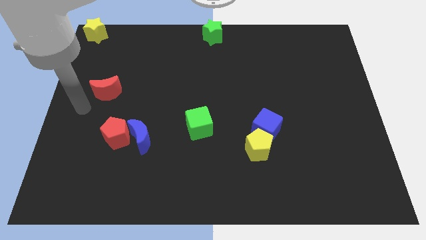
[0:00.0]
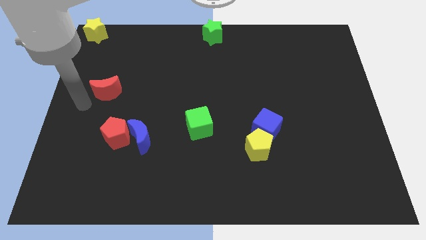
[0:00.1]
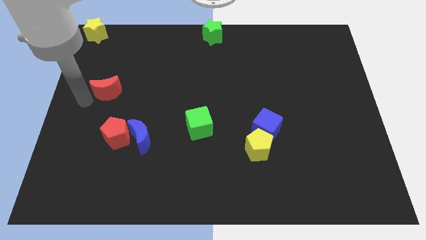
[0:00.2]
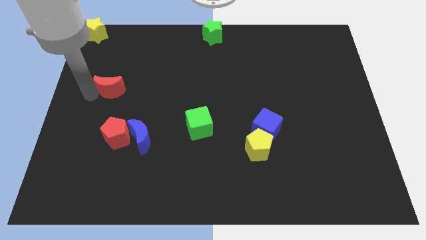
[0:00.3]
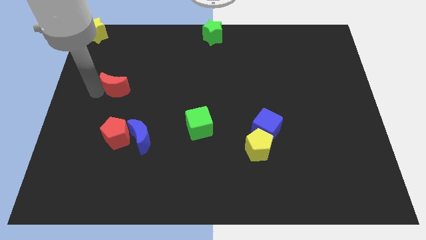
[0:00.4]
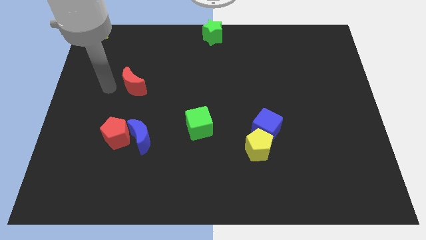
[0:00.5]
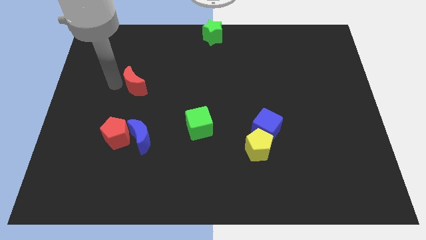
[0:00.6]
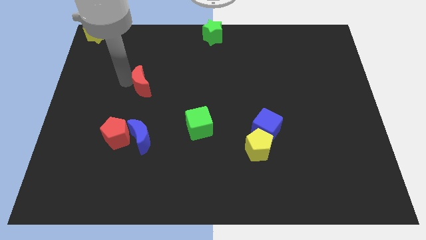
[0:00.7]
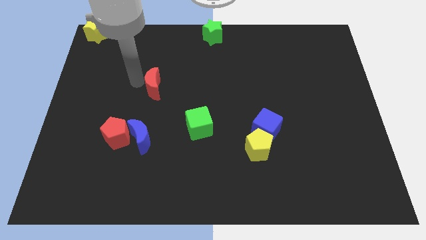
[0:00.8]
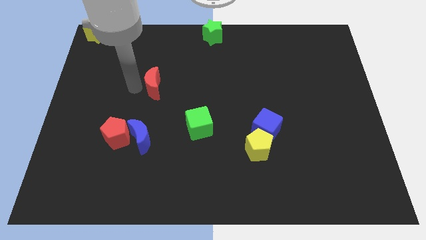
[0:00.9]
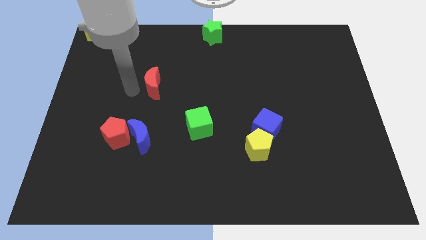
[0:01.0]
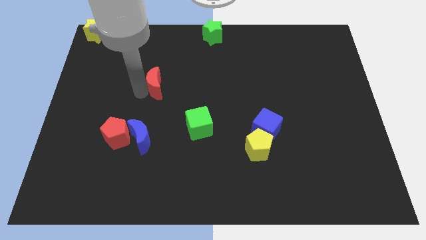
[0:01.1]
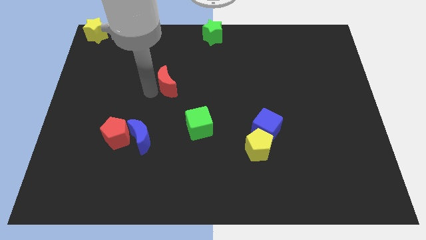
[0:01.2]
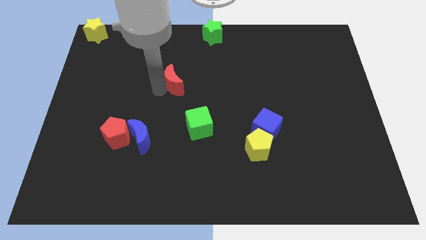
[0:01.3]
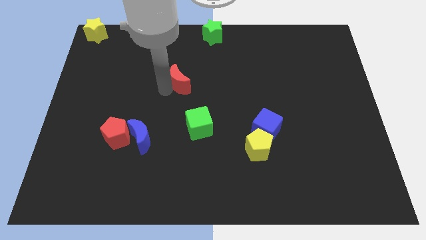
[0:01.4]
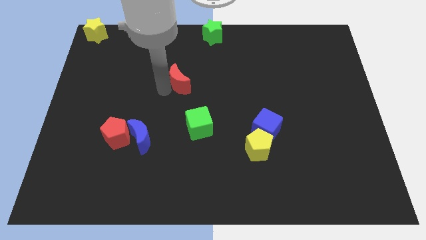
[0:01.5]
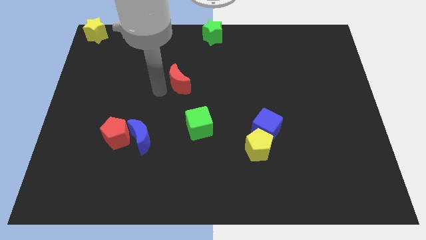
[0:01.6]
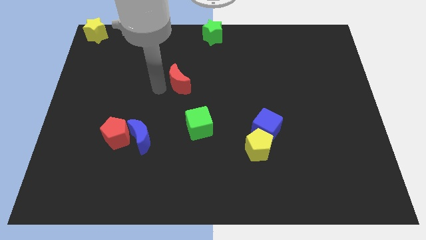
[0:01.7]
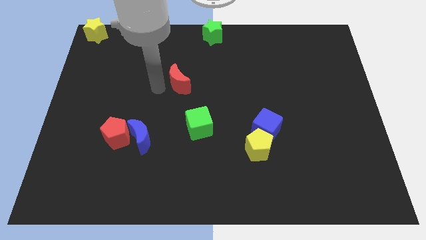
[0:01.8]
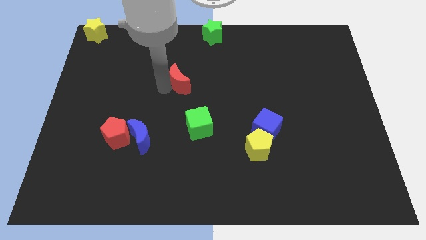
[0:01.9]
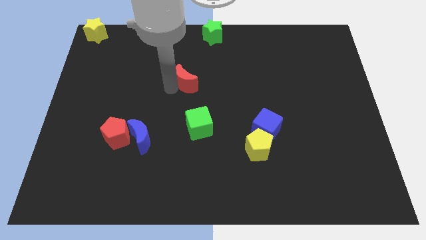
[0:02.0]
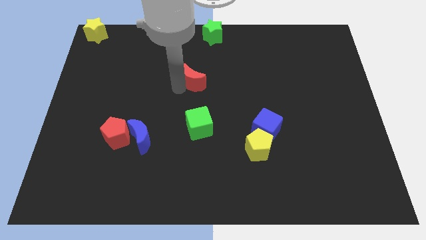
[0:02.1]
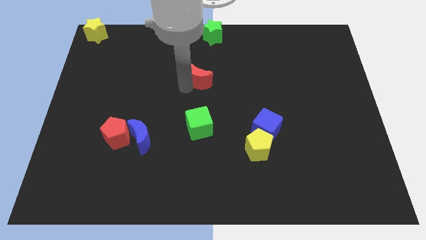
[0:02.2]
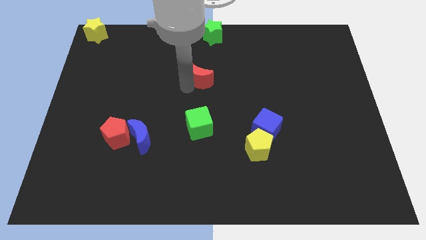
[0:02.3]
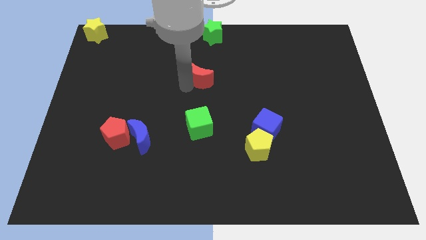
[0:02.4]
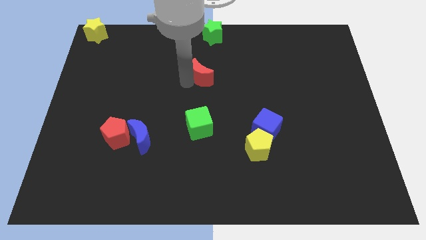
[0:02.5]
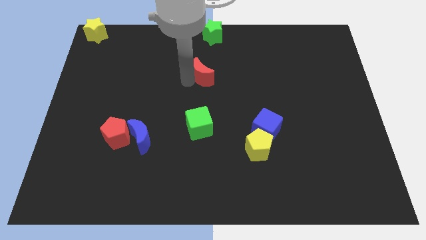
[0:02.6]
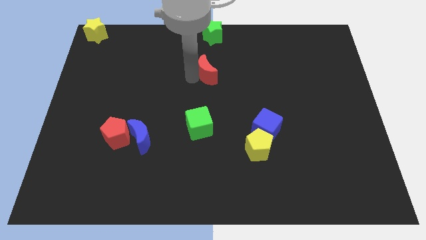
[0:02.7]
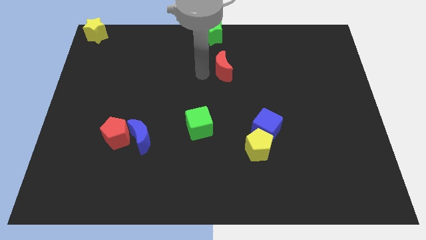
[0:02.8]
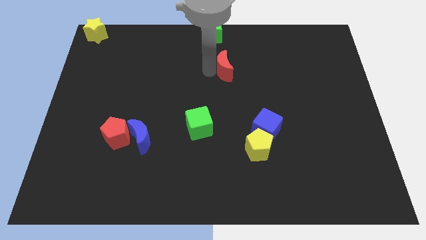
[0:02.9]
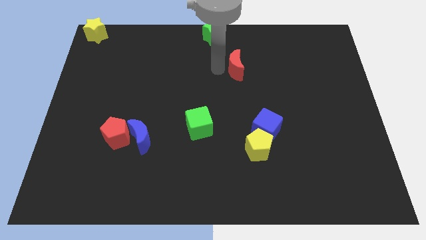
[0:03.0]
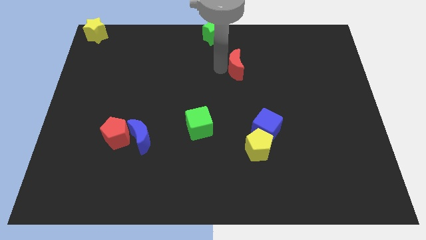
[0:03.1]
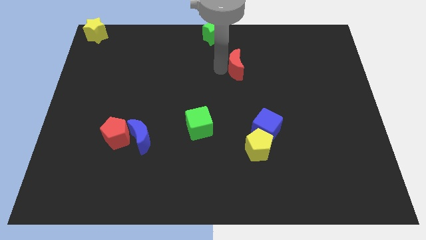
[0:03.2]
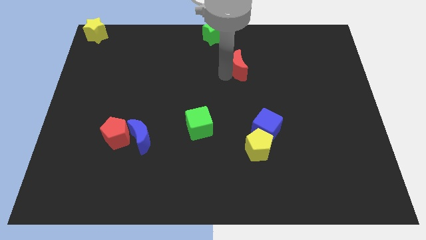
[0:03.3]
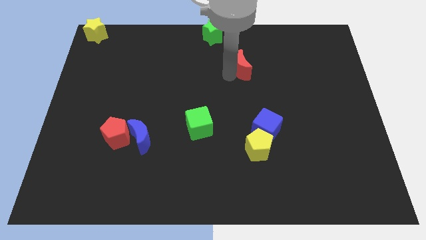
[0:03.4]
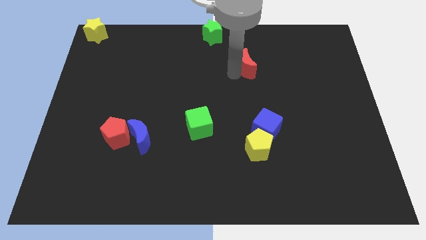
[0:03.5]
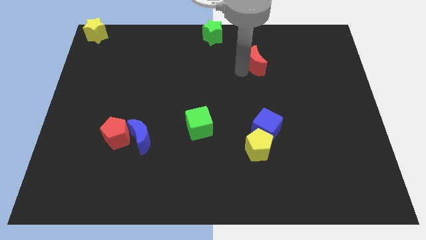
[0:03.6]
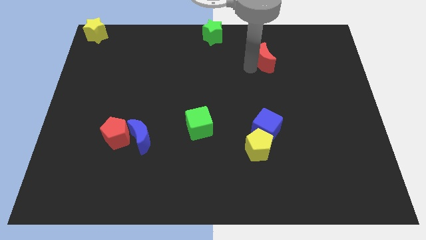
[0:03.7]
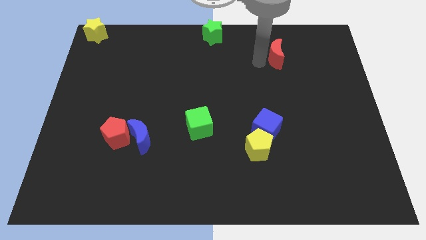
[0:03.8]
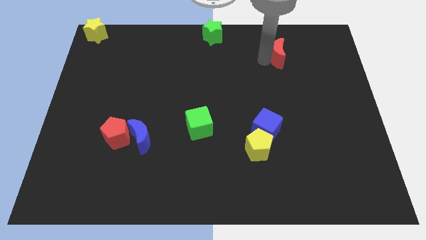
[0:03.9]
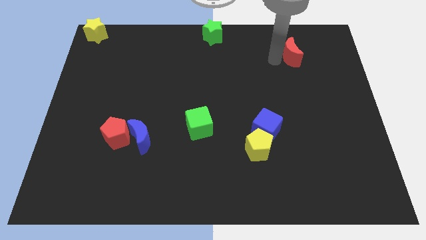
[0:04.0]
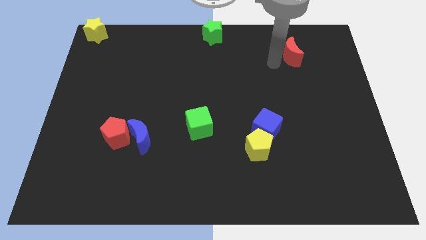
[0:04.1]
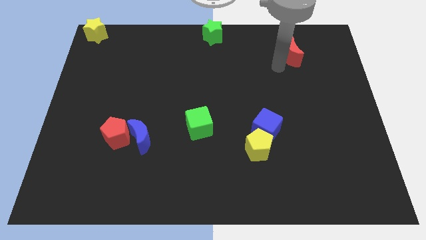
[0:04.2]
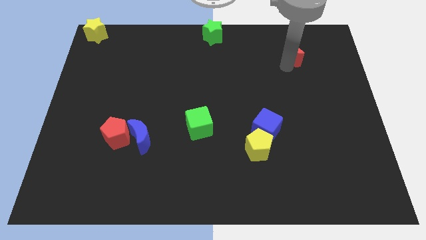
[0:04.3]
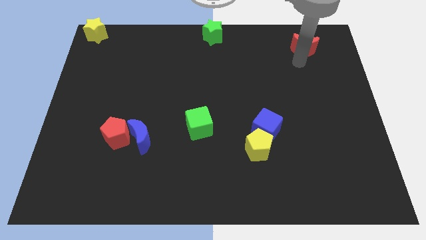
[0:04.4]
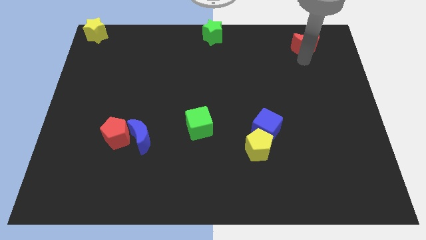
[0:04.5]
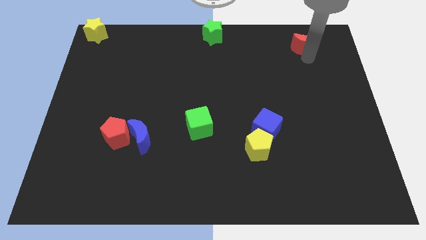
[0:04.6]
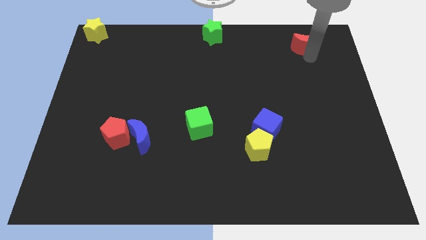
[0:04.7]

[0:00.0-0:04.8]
place the red moon above the blue cube

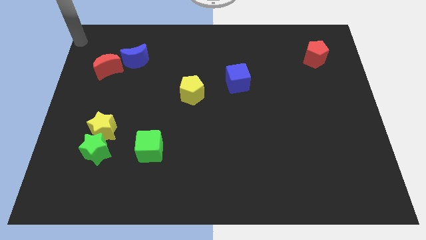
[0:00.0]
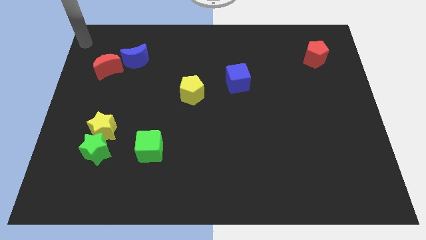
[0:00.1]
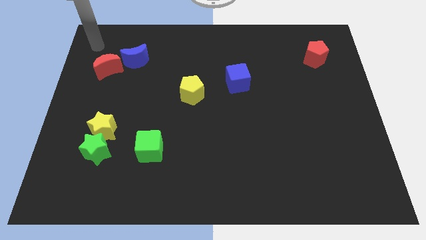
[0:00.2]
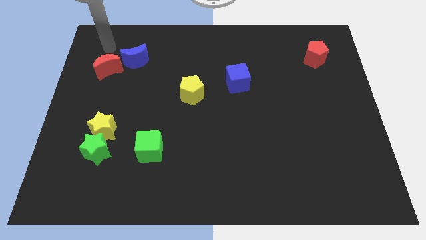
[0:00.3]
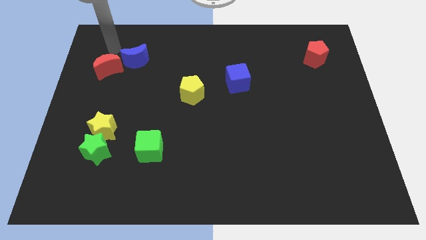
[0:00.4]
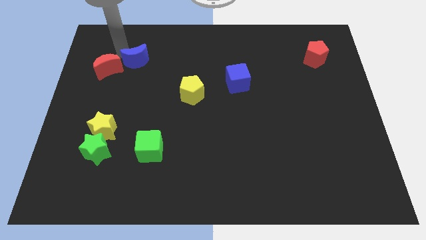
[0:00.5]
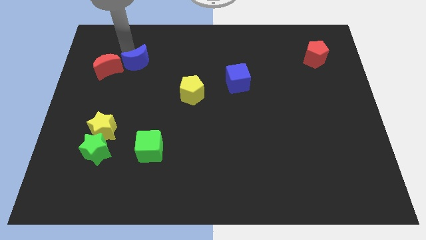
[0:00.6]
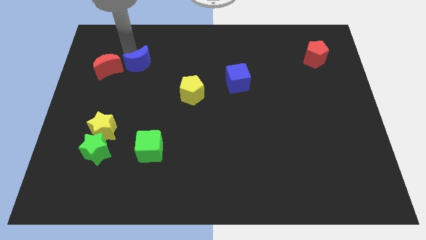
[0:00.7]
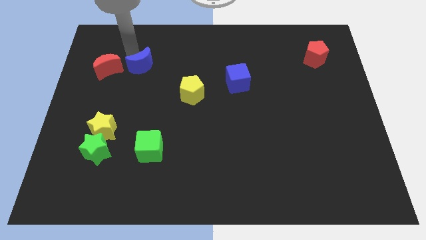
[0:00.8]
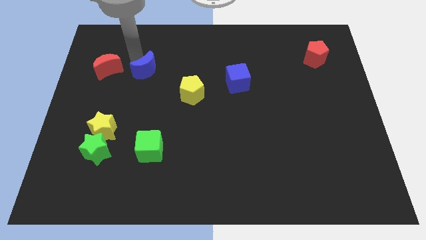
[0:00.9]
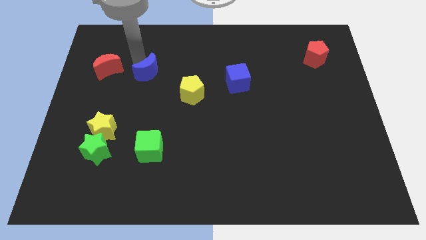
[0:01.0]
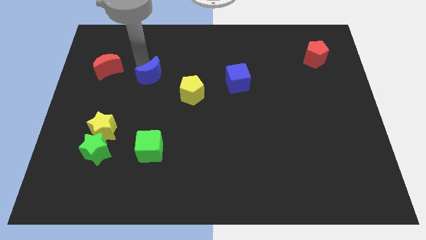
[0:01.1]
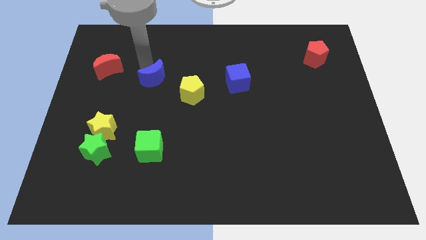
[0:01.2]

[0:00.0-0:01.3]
put the blue crescent above the green cube

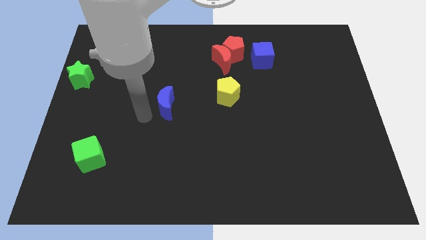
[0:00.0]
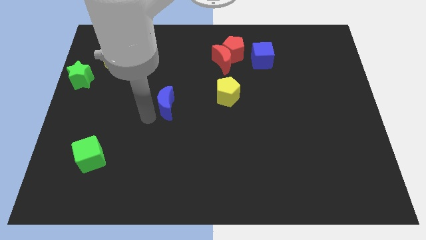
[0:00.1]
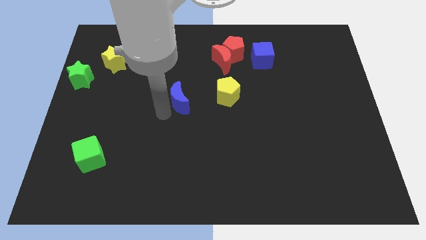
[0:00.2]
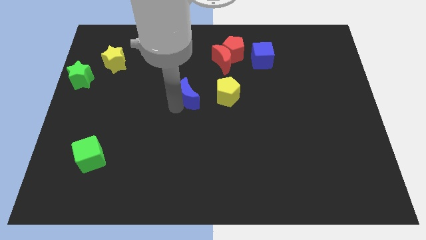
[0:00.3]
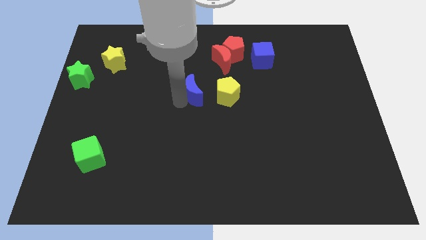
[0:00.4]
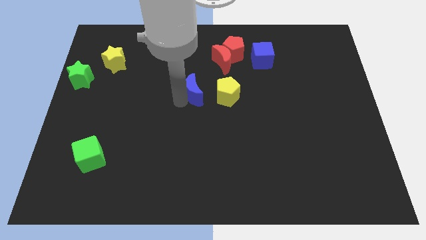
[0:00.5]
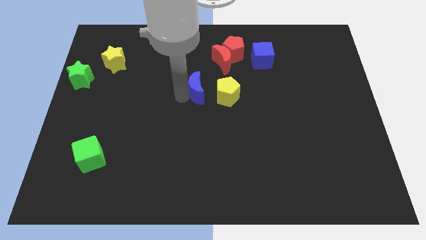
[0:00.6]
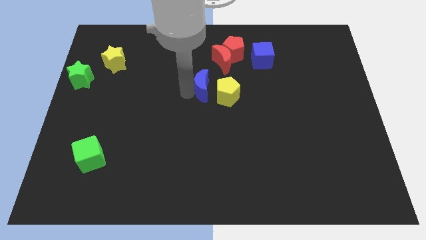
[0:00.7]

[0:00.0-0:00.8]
push the blue crescent left to the yellow pentagon

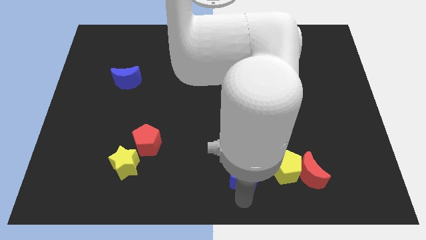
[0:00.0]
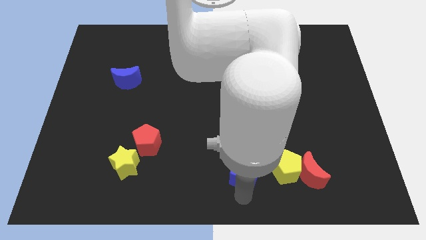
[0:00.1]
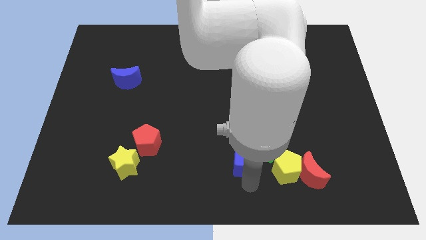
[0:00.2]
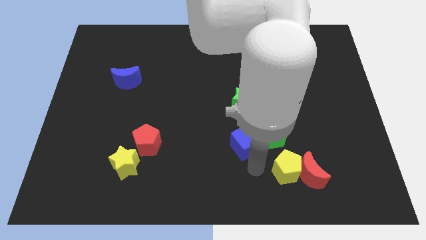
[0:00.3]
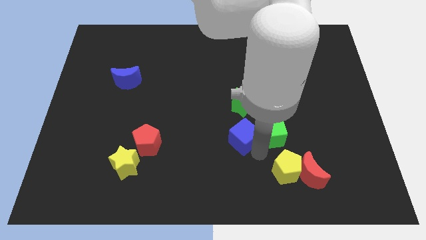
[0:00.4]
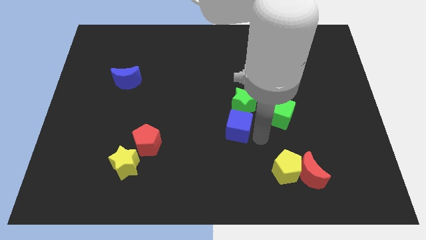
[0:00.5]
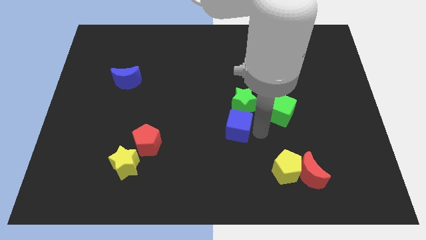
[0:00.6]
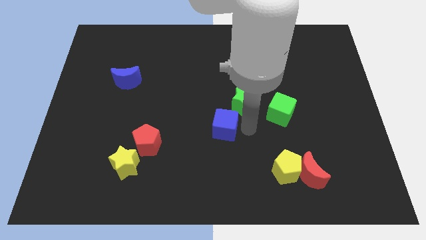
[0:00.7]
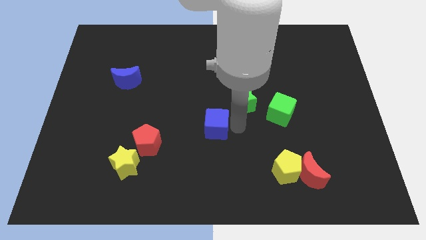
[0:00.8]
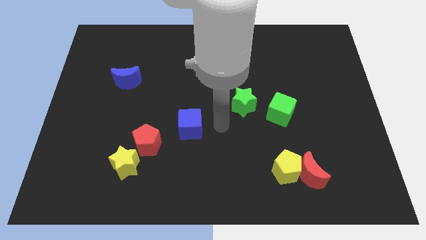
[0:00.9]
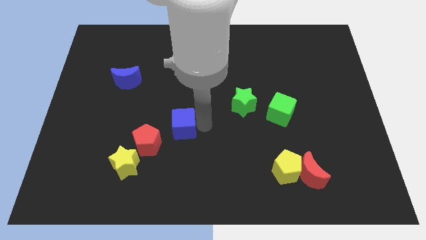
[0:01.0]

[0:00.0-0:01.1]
separate the blue cube from the green cube

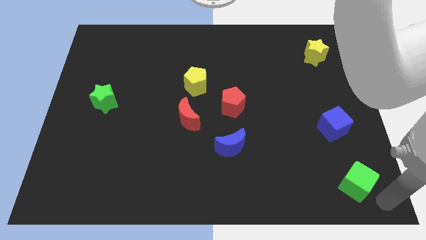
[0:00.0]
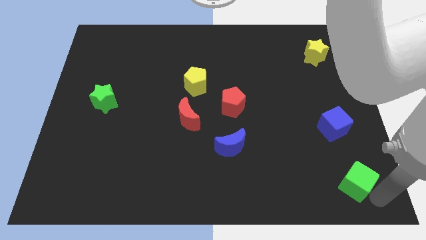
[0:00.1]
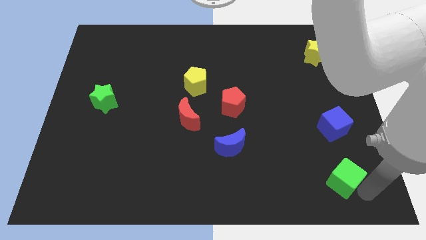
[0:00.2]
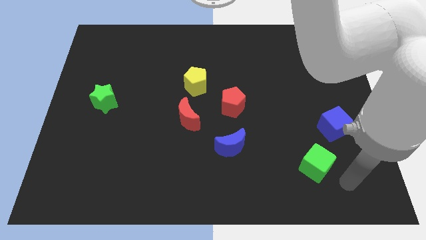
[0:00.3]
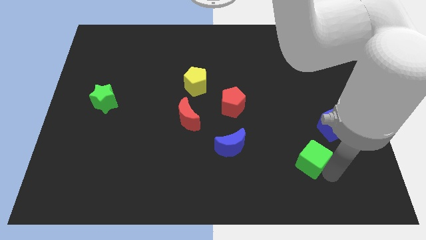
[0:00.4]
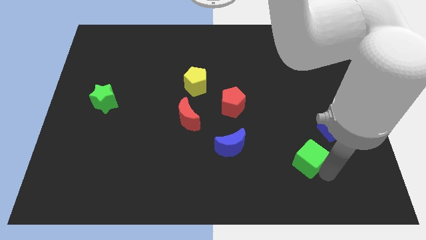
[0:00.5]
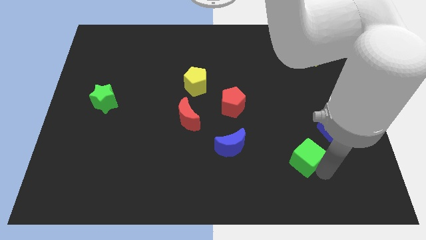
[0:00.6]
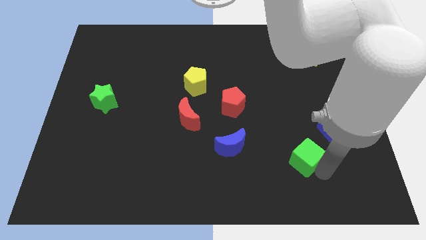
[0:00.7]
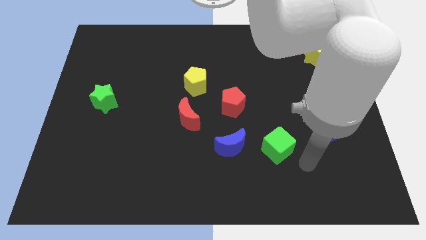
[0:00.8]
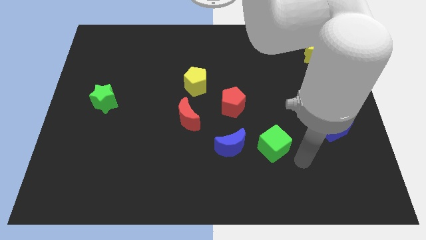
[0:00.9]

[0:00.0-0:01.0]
place green cube to the right of the blue moon
